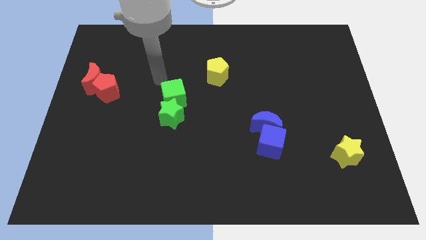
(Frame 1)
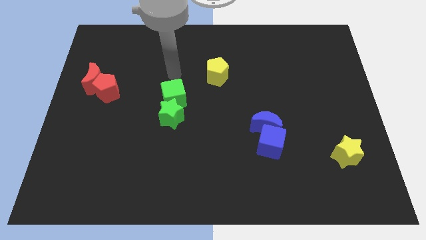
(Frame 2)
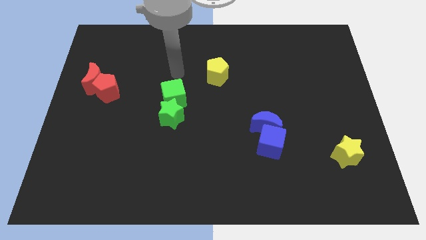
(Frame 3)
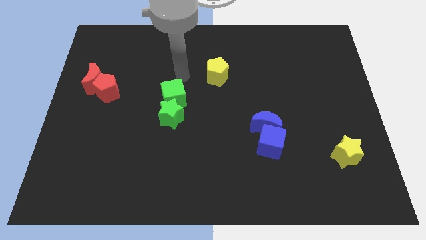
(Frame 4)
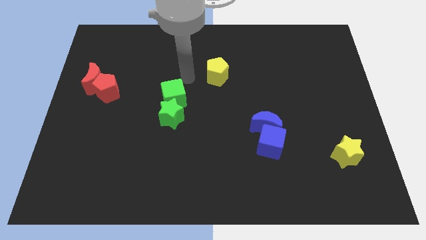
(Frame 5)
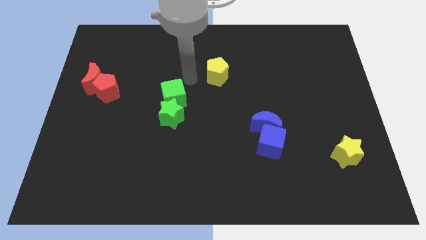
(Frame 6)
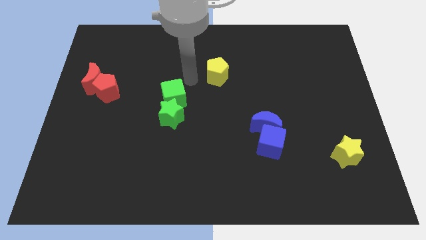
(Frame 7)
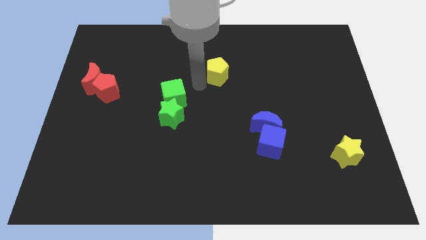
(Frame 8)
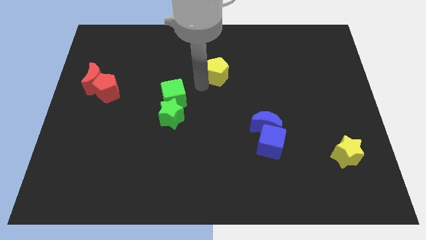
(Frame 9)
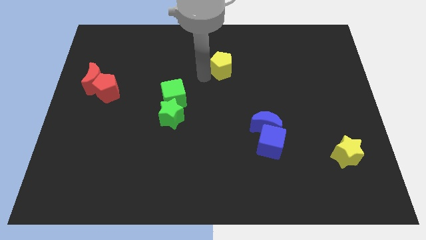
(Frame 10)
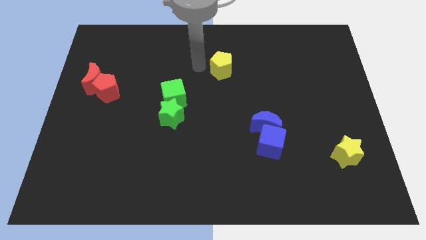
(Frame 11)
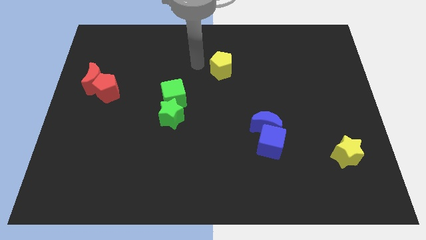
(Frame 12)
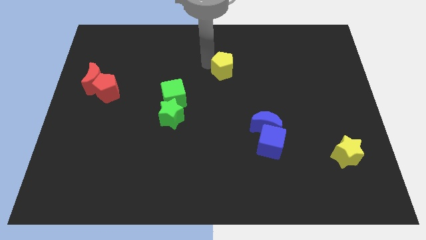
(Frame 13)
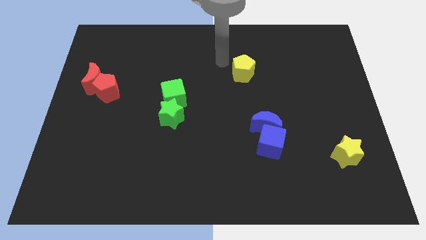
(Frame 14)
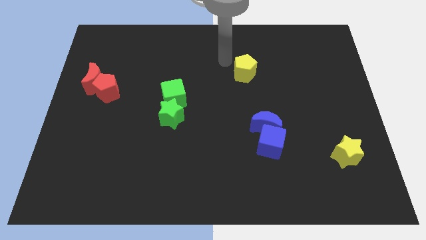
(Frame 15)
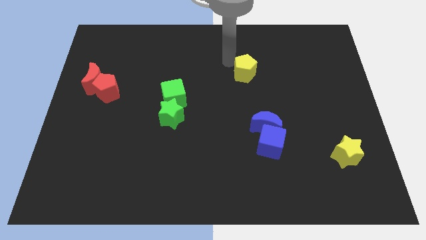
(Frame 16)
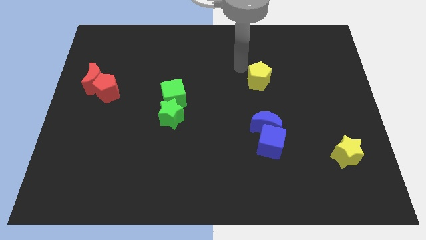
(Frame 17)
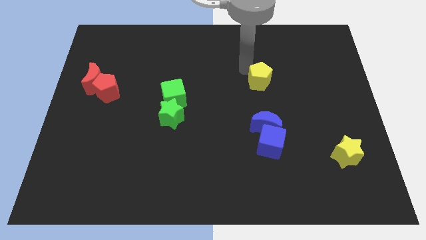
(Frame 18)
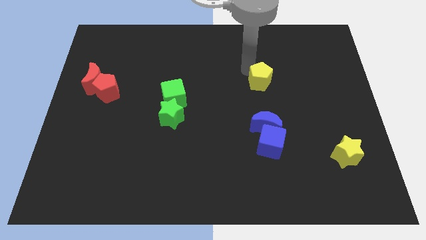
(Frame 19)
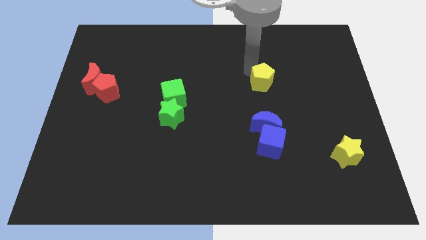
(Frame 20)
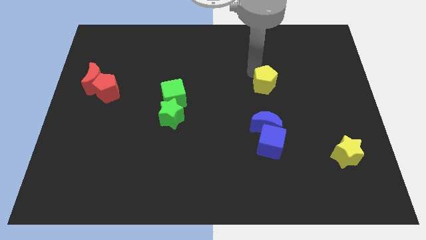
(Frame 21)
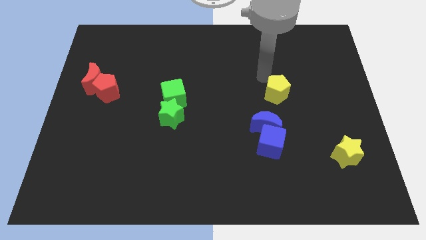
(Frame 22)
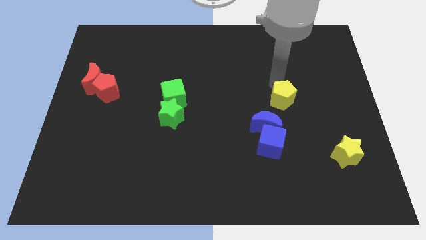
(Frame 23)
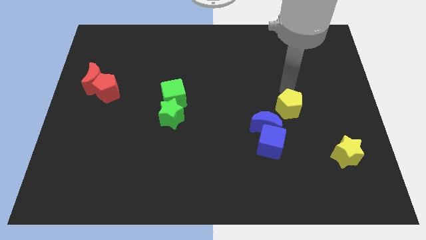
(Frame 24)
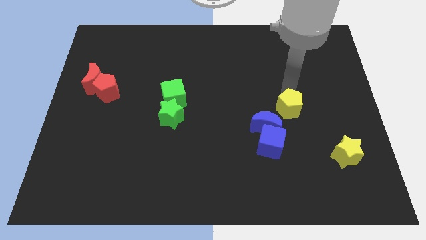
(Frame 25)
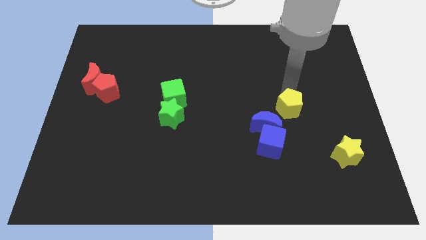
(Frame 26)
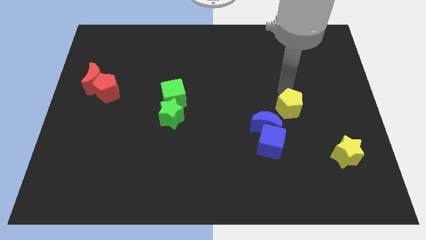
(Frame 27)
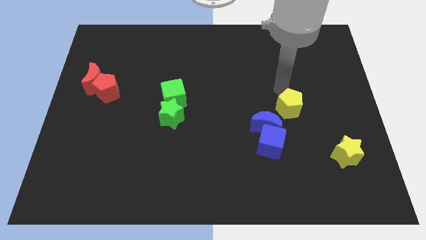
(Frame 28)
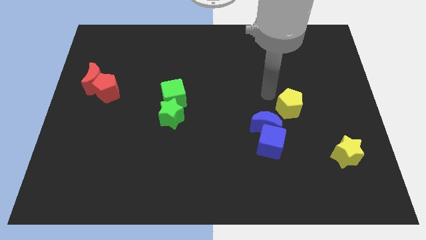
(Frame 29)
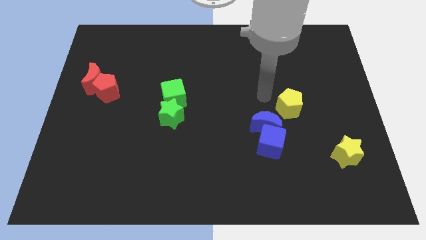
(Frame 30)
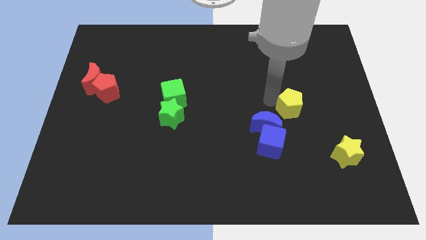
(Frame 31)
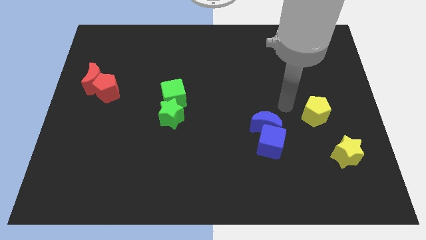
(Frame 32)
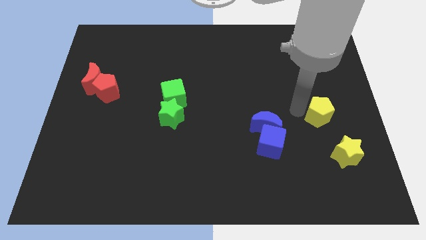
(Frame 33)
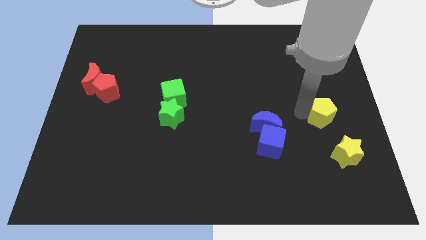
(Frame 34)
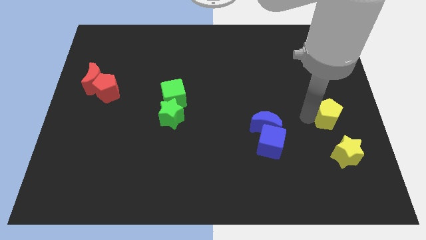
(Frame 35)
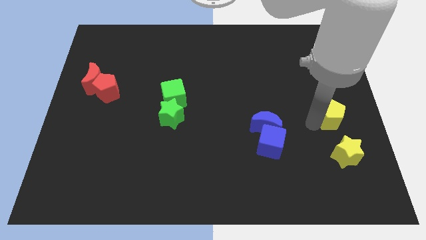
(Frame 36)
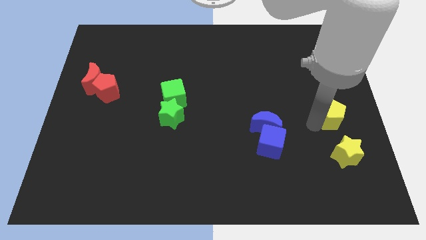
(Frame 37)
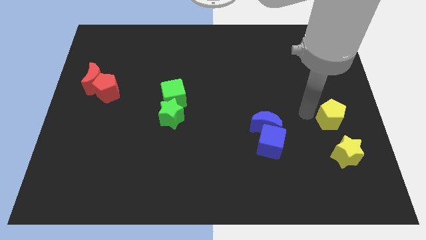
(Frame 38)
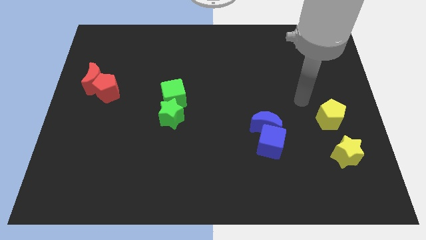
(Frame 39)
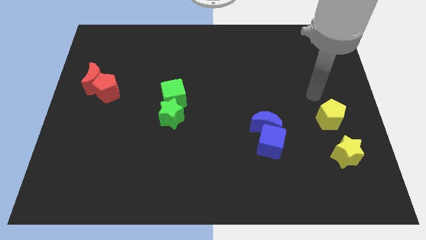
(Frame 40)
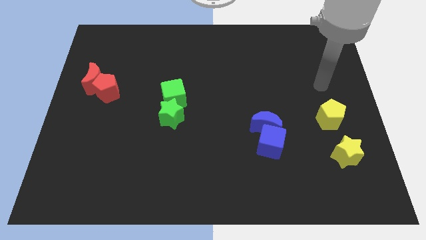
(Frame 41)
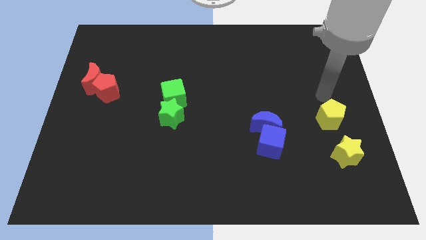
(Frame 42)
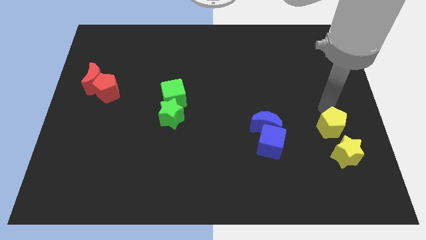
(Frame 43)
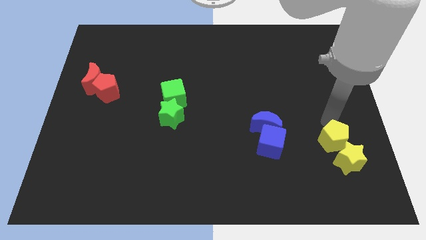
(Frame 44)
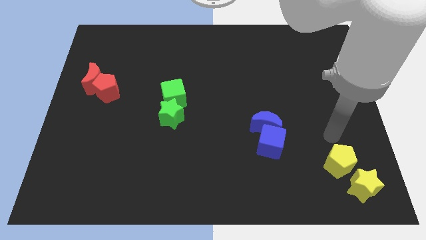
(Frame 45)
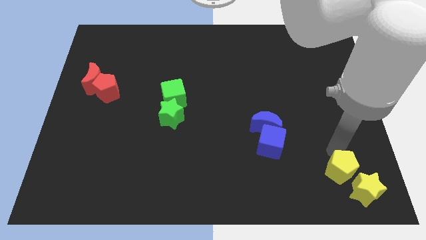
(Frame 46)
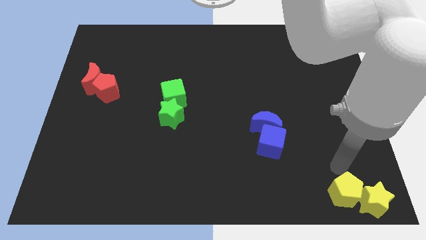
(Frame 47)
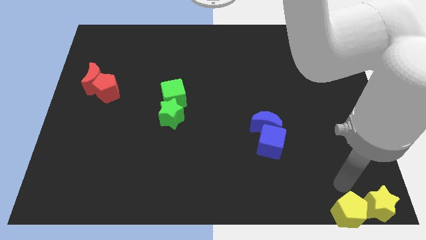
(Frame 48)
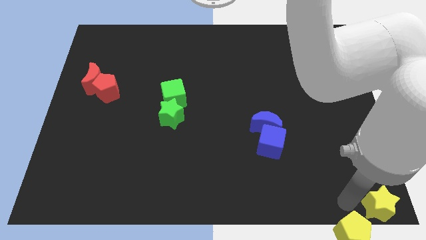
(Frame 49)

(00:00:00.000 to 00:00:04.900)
move the top center yellow pentagon to the bottom right yellow star

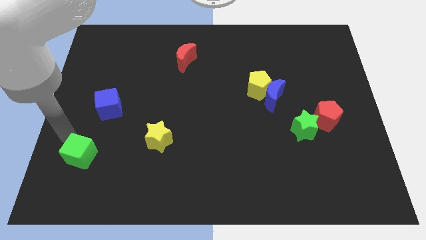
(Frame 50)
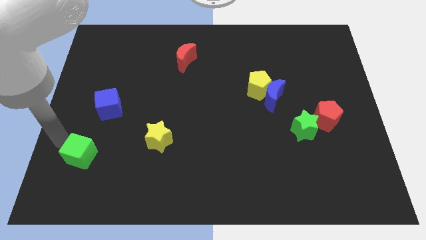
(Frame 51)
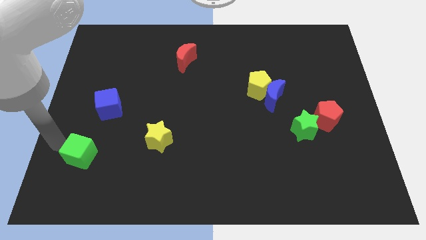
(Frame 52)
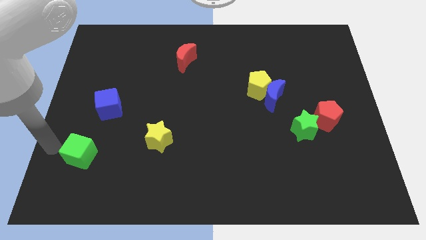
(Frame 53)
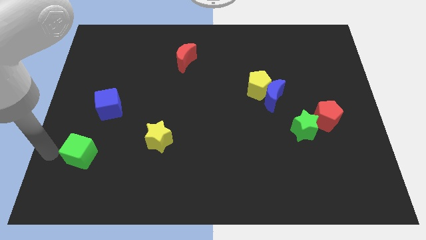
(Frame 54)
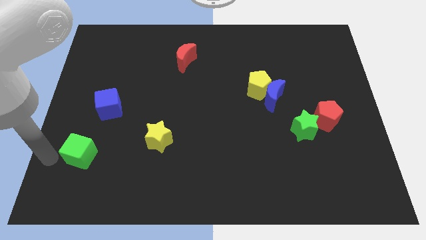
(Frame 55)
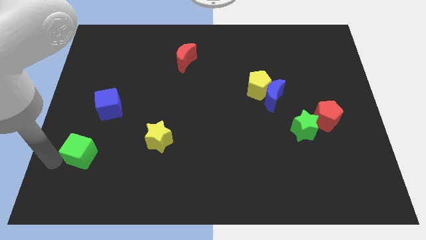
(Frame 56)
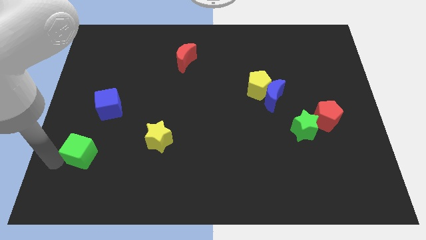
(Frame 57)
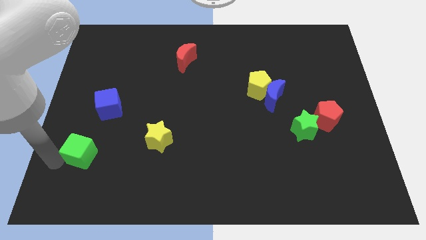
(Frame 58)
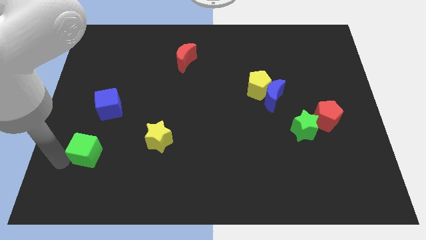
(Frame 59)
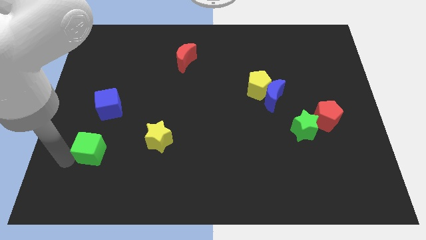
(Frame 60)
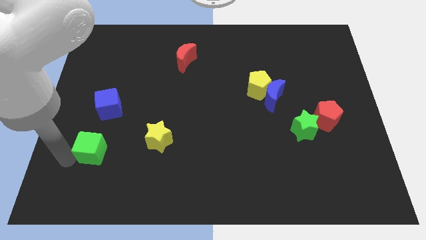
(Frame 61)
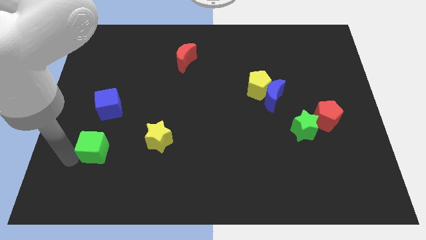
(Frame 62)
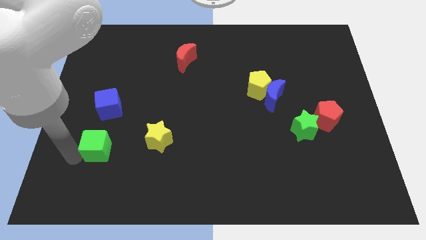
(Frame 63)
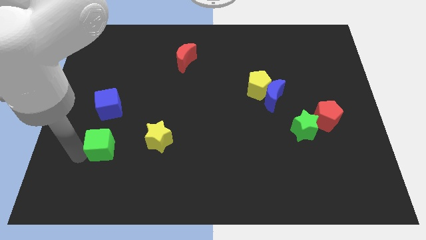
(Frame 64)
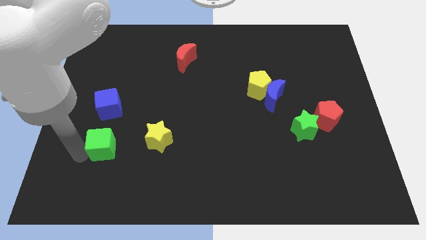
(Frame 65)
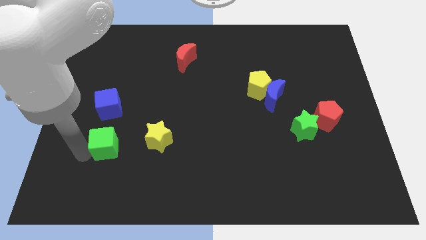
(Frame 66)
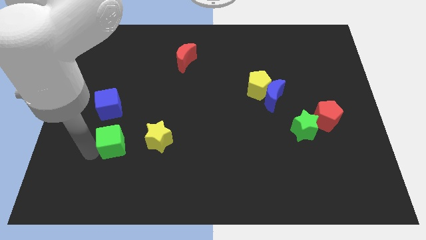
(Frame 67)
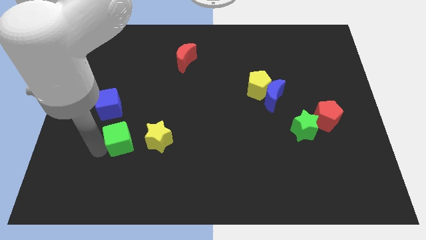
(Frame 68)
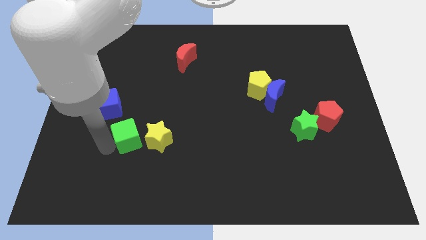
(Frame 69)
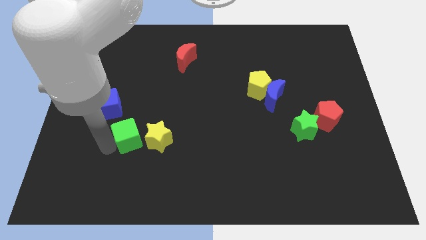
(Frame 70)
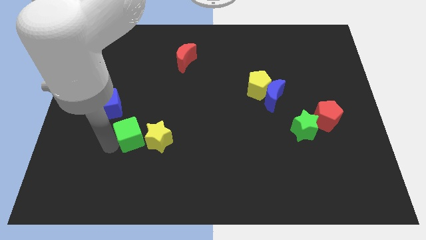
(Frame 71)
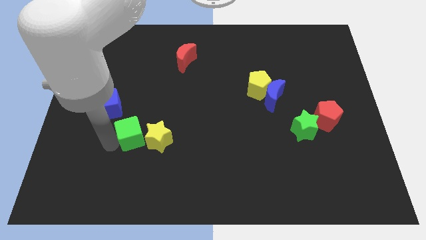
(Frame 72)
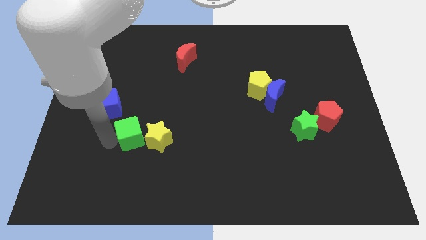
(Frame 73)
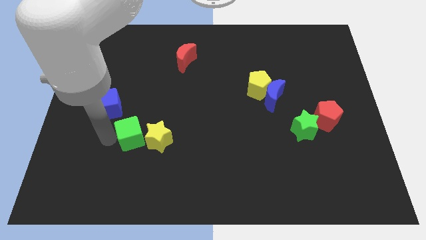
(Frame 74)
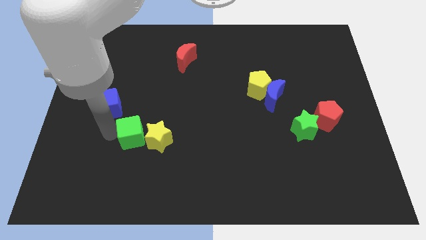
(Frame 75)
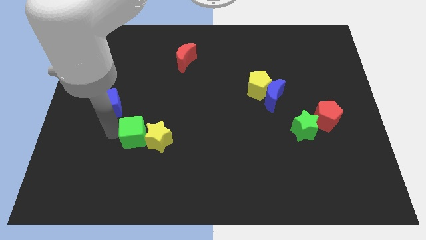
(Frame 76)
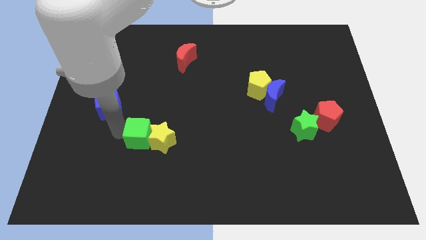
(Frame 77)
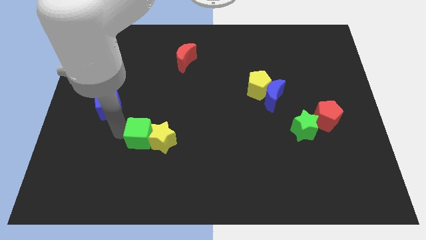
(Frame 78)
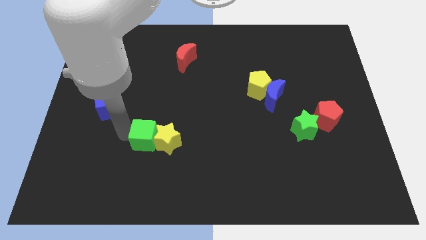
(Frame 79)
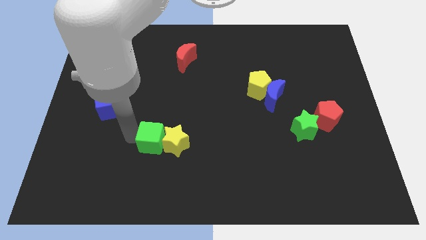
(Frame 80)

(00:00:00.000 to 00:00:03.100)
slide green cube into yellow star

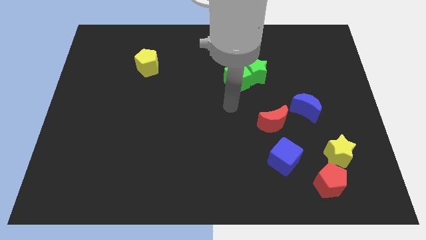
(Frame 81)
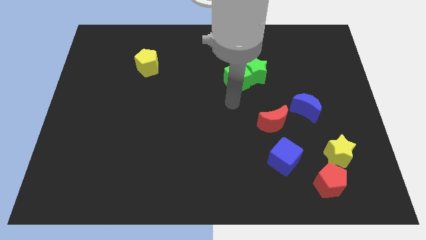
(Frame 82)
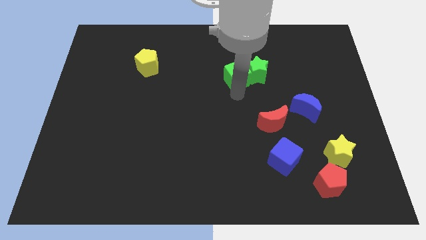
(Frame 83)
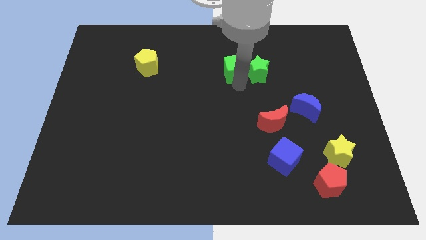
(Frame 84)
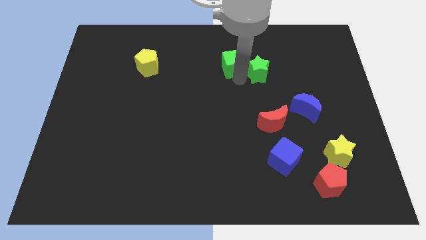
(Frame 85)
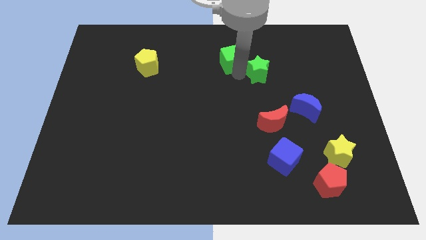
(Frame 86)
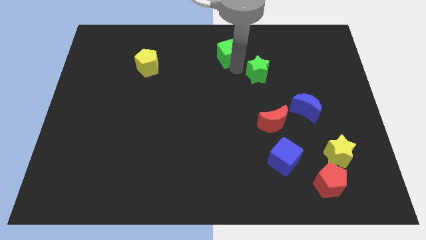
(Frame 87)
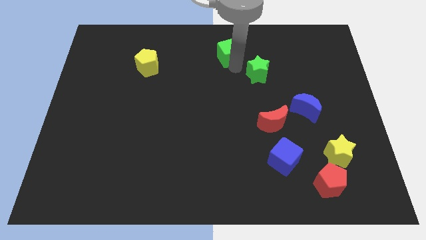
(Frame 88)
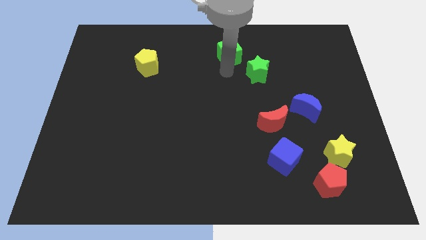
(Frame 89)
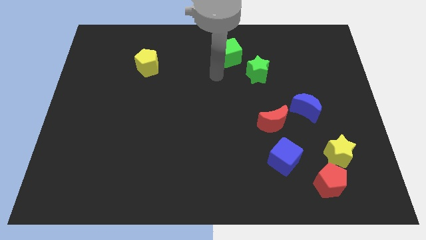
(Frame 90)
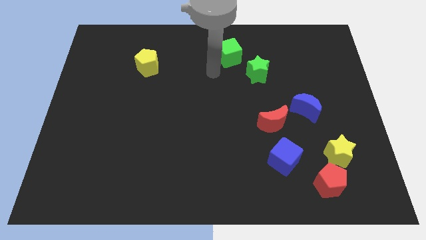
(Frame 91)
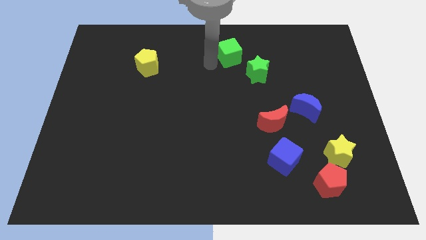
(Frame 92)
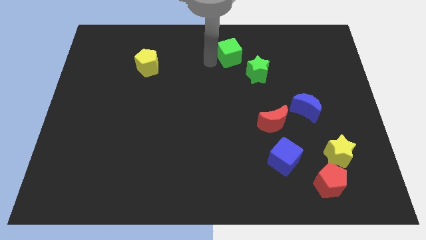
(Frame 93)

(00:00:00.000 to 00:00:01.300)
separate the green cube from the green star
